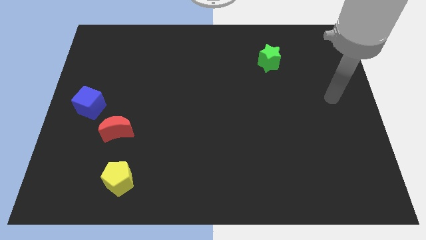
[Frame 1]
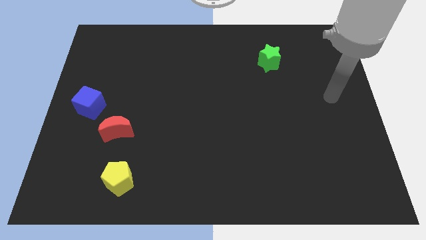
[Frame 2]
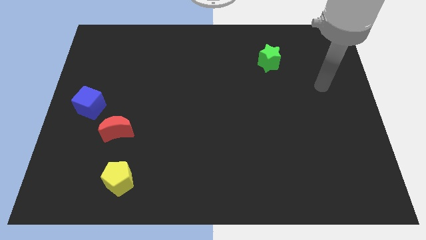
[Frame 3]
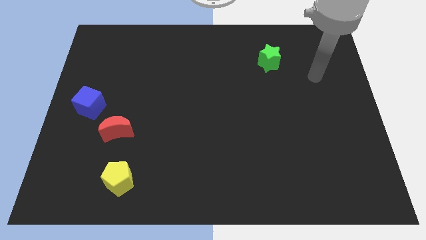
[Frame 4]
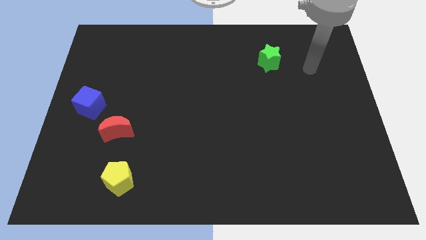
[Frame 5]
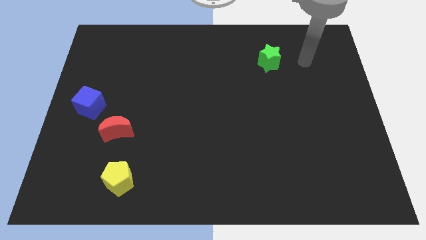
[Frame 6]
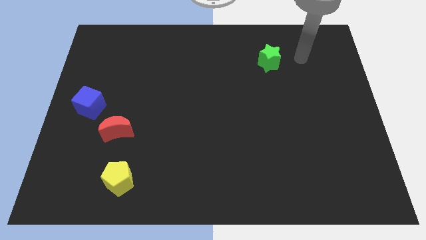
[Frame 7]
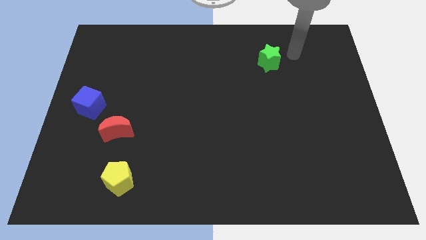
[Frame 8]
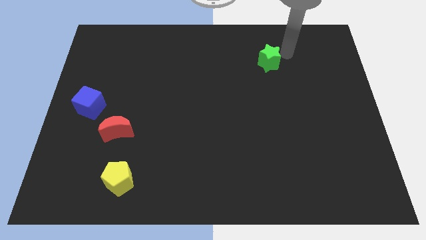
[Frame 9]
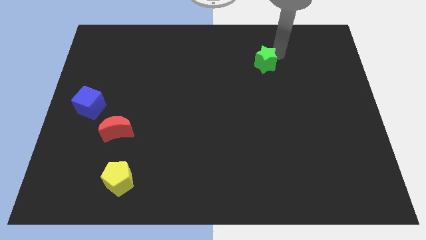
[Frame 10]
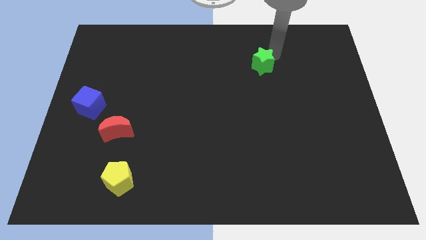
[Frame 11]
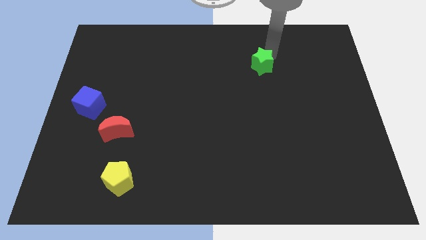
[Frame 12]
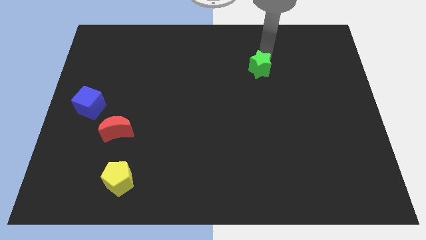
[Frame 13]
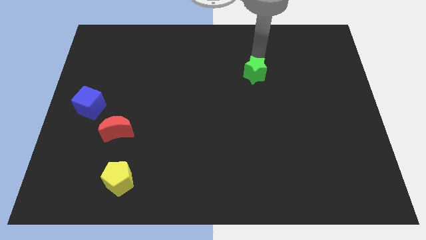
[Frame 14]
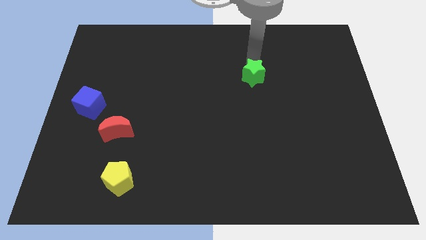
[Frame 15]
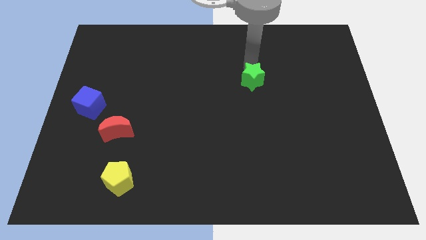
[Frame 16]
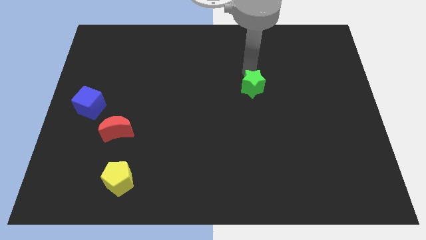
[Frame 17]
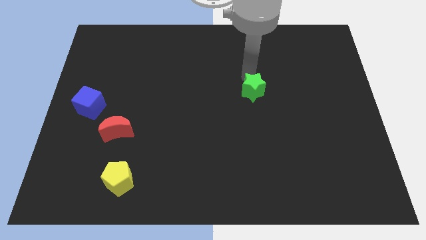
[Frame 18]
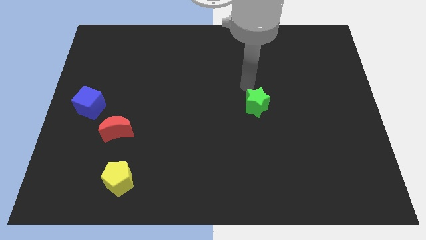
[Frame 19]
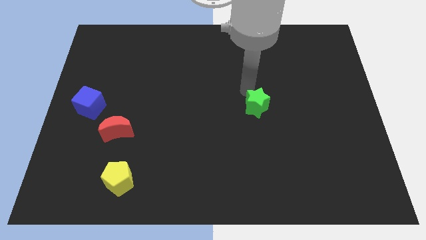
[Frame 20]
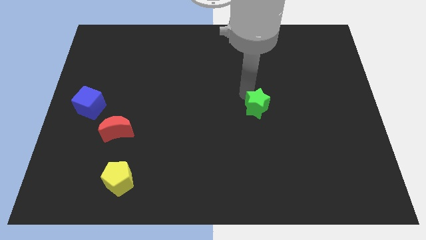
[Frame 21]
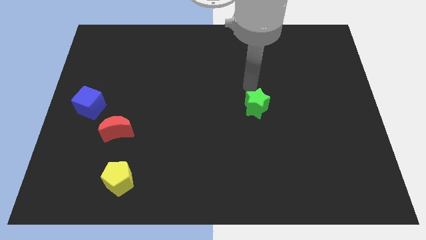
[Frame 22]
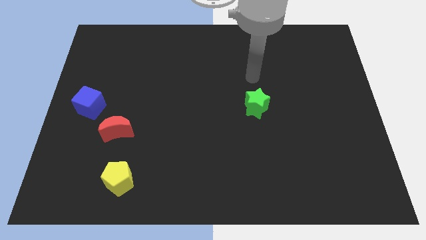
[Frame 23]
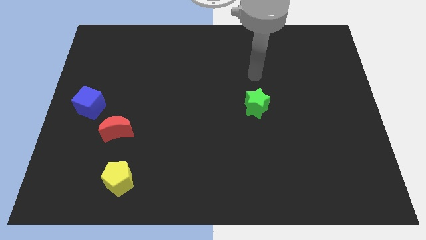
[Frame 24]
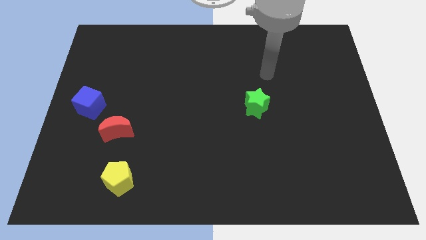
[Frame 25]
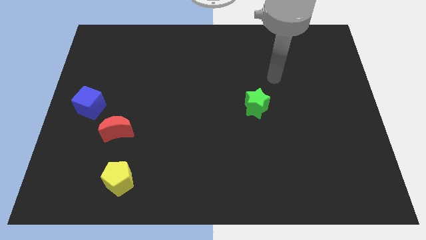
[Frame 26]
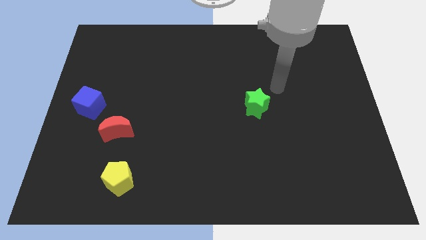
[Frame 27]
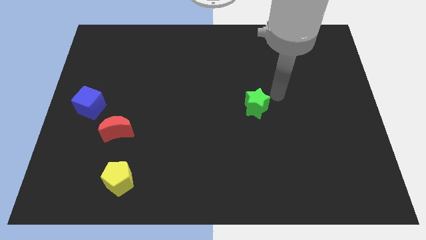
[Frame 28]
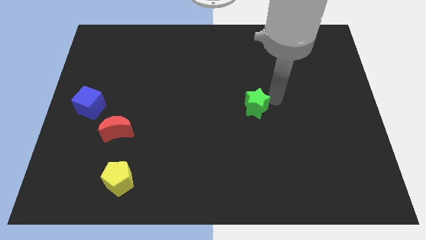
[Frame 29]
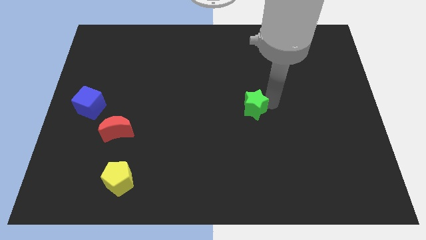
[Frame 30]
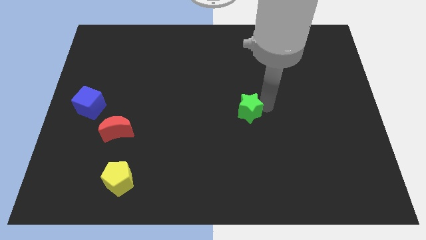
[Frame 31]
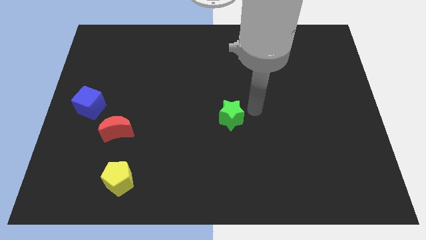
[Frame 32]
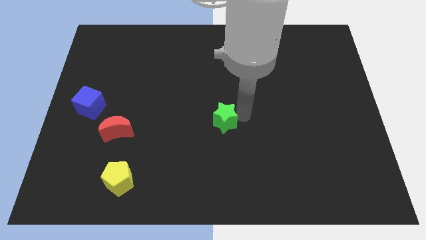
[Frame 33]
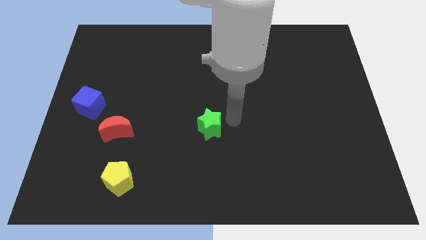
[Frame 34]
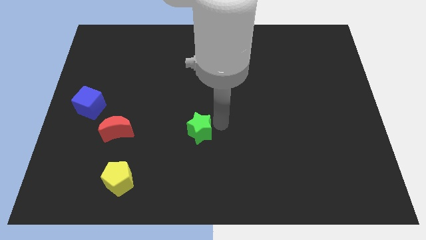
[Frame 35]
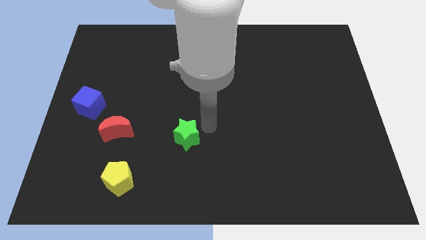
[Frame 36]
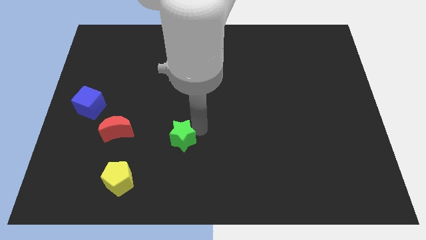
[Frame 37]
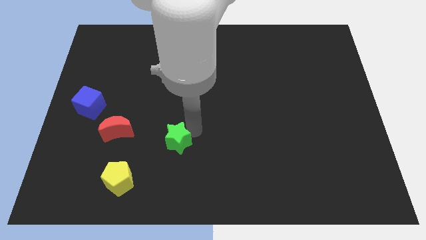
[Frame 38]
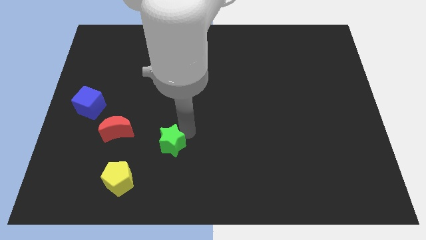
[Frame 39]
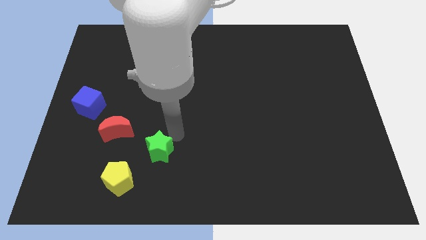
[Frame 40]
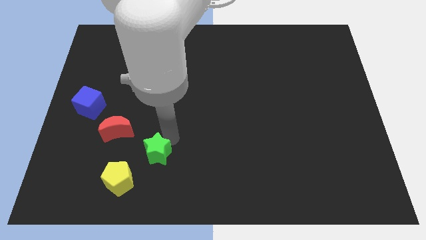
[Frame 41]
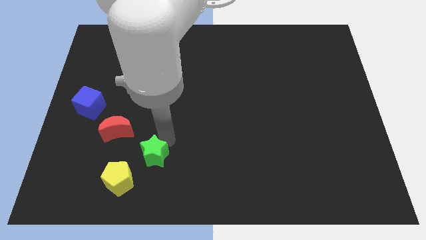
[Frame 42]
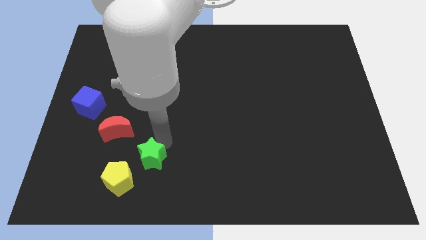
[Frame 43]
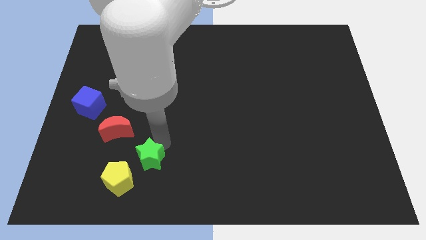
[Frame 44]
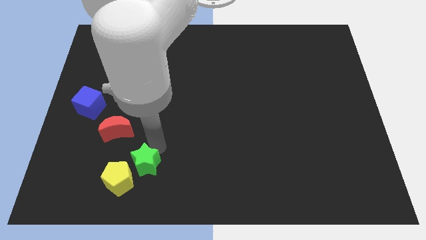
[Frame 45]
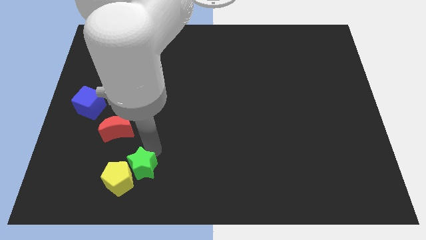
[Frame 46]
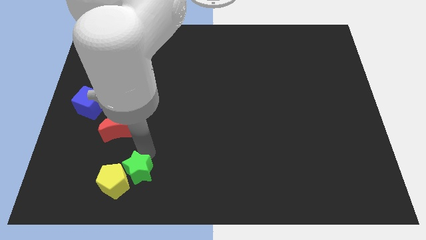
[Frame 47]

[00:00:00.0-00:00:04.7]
put the green star close to the yellow pentagon

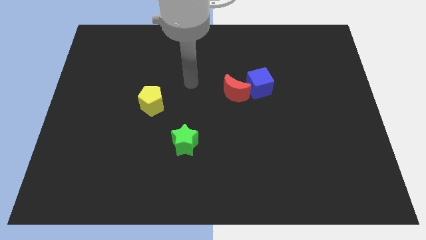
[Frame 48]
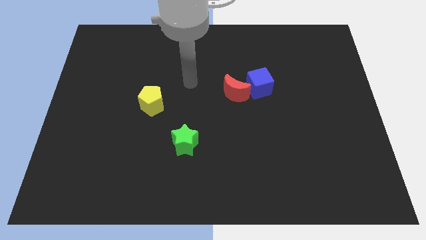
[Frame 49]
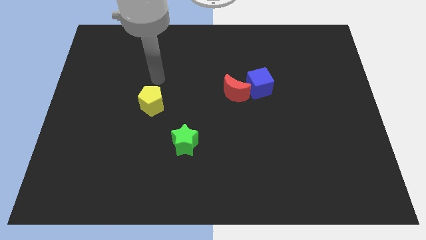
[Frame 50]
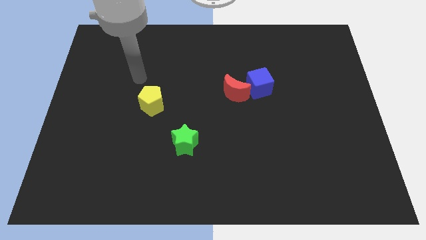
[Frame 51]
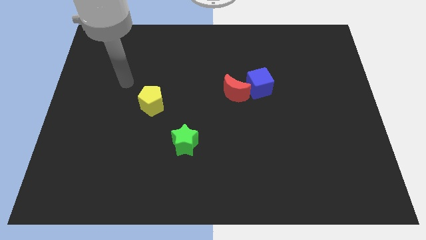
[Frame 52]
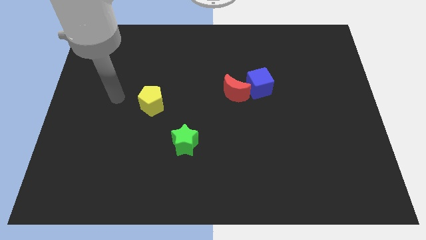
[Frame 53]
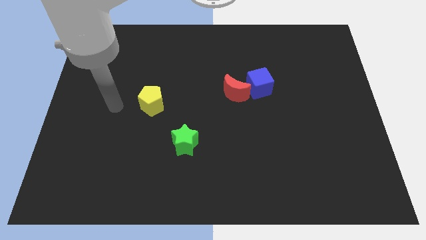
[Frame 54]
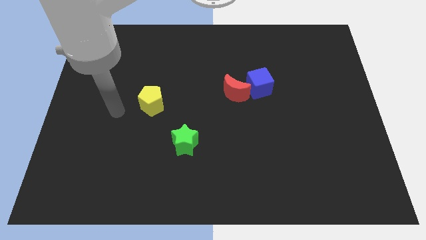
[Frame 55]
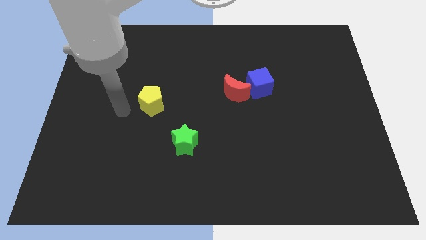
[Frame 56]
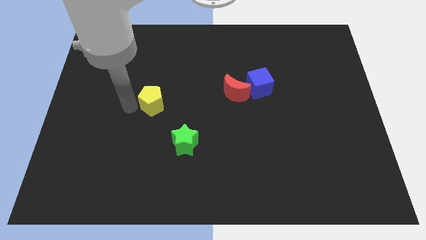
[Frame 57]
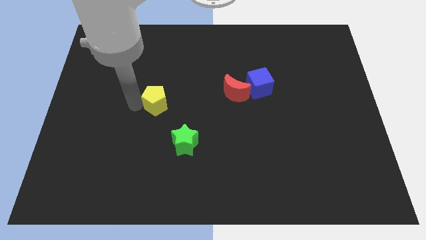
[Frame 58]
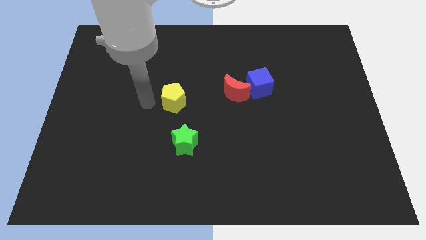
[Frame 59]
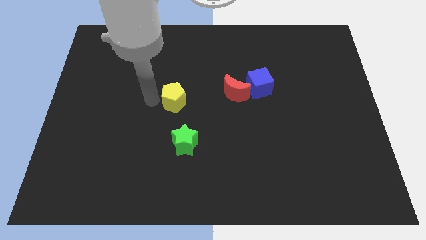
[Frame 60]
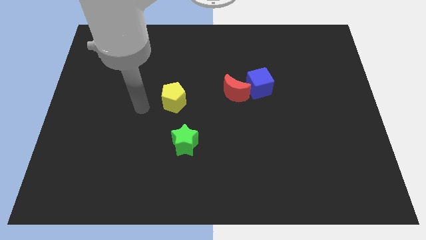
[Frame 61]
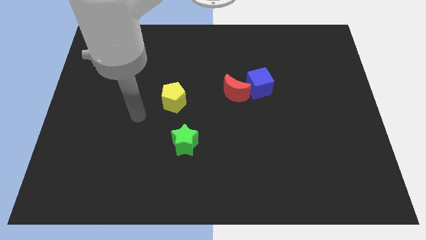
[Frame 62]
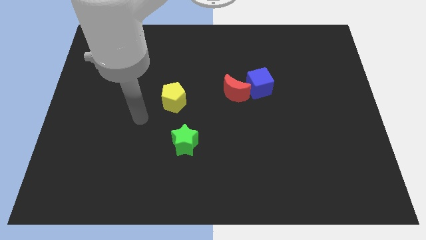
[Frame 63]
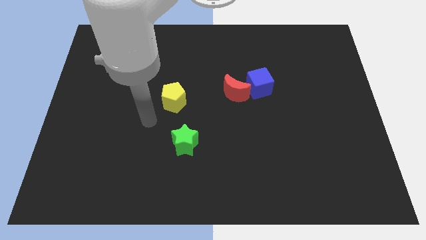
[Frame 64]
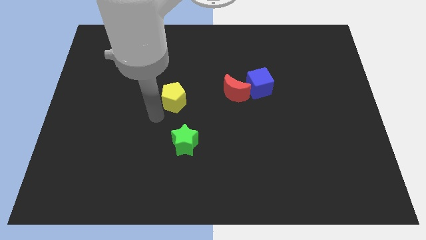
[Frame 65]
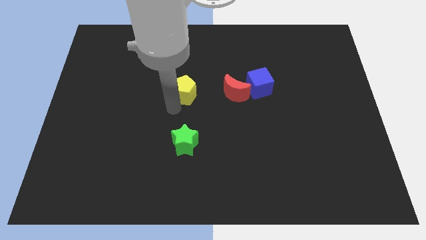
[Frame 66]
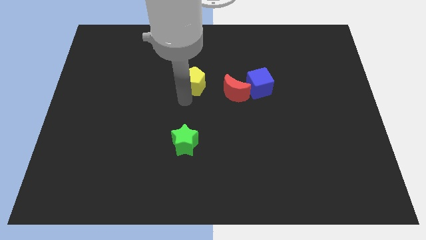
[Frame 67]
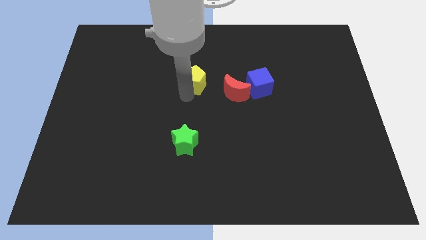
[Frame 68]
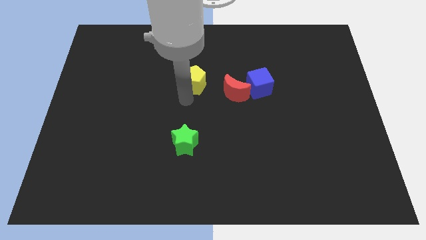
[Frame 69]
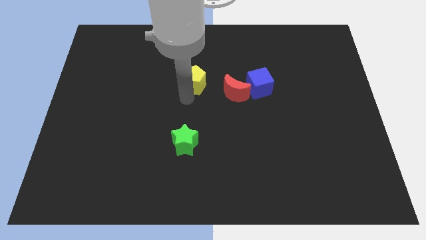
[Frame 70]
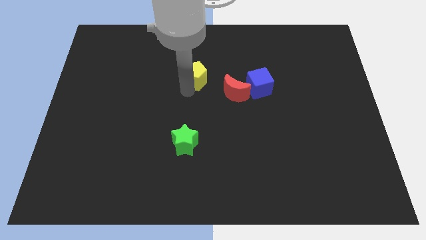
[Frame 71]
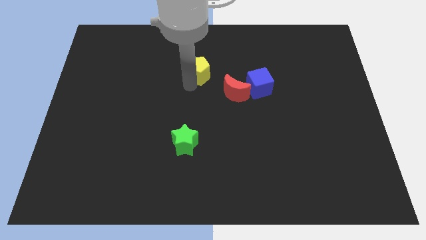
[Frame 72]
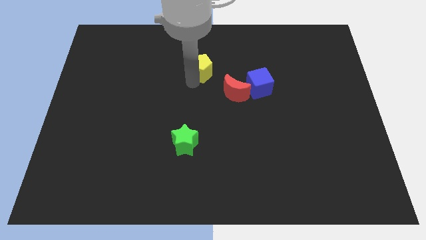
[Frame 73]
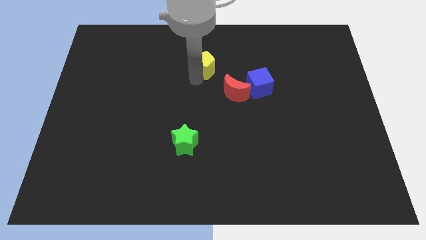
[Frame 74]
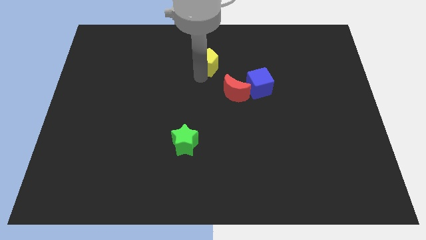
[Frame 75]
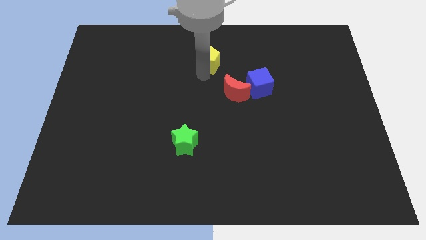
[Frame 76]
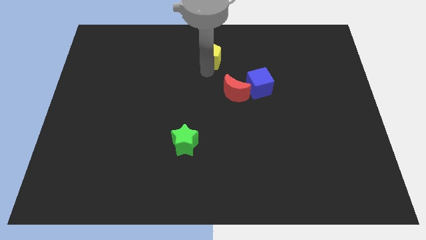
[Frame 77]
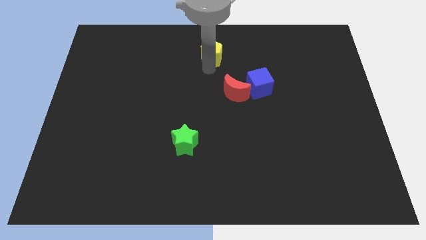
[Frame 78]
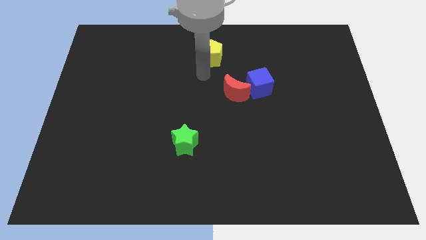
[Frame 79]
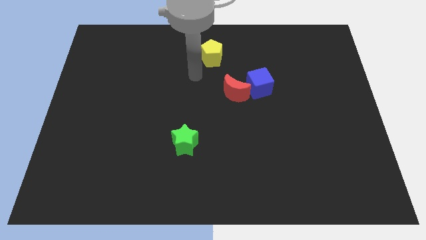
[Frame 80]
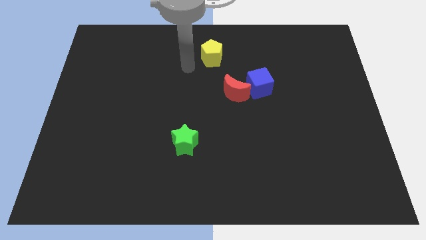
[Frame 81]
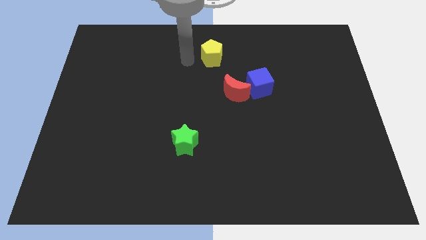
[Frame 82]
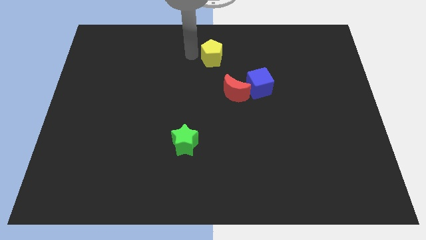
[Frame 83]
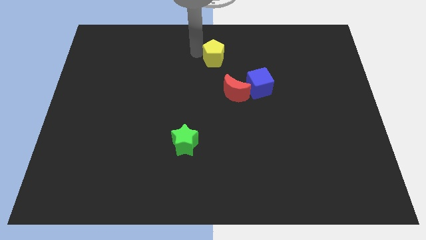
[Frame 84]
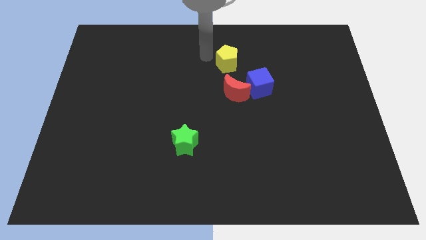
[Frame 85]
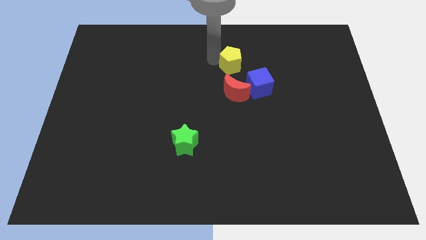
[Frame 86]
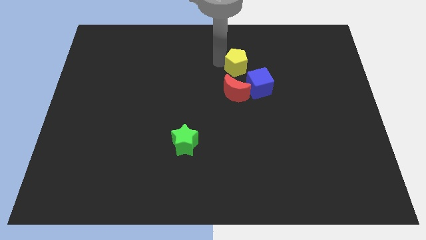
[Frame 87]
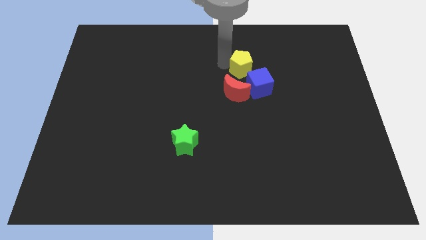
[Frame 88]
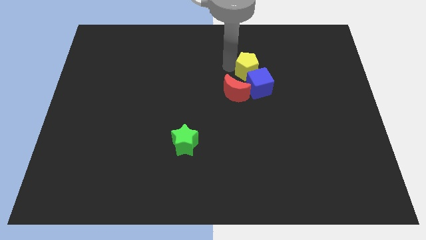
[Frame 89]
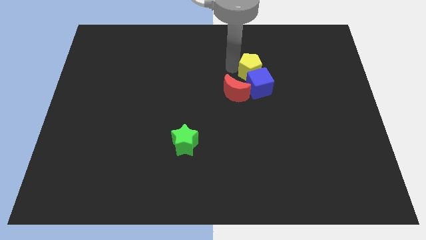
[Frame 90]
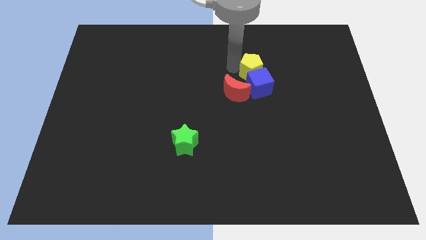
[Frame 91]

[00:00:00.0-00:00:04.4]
slide the yellow pentagon next to the blue cube
